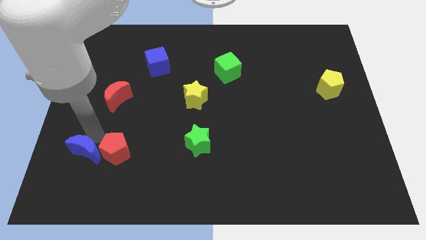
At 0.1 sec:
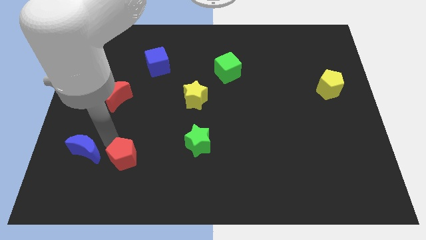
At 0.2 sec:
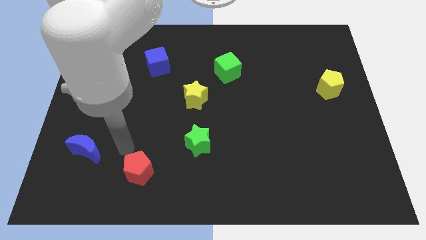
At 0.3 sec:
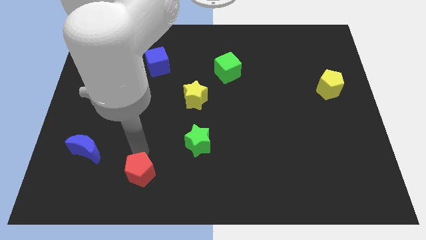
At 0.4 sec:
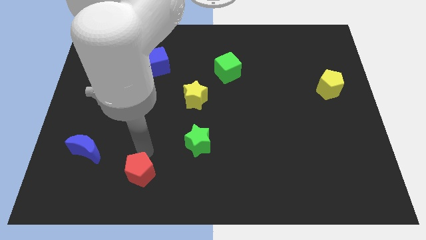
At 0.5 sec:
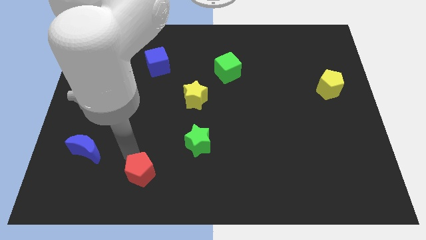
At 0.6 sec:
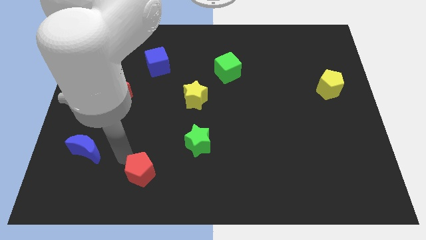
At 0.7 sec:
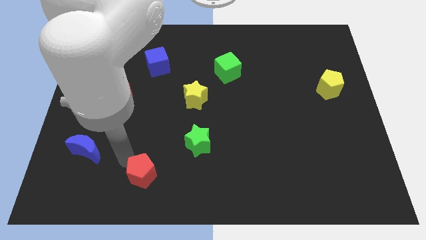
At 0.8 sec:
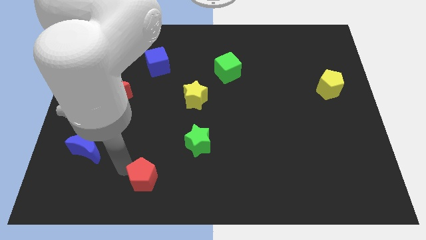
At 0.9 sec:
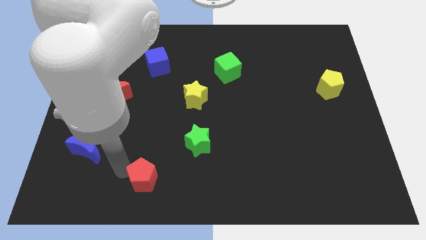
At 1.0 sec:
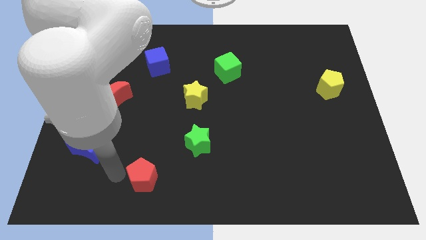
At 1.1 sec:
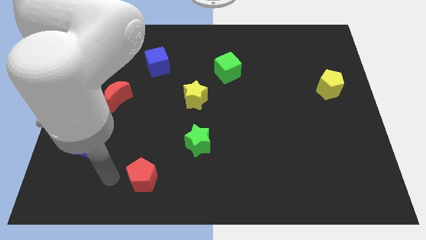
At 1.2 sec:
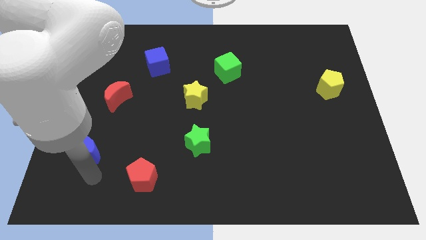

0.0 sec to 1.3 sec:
push the red pentagon diagonally left of the green star

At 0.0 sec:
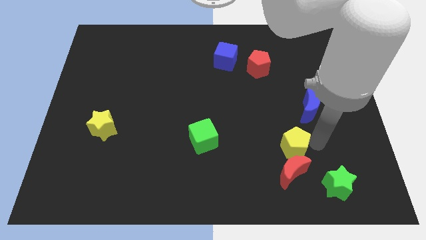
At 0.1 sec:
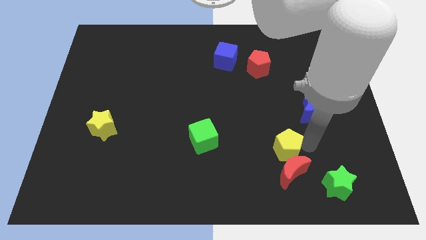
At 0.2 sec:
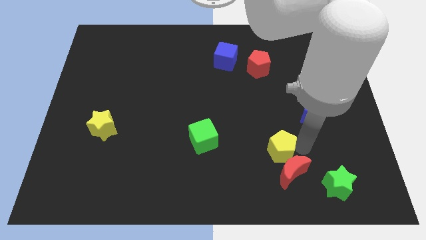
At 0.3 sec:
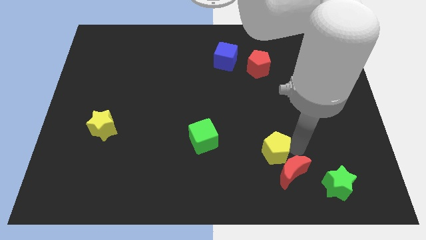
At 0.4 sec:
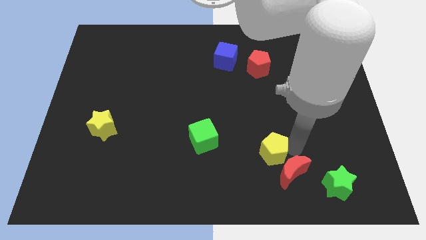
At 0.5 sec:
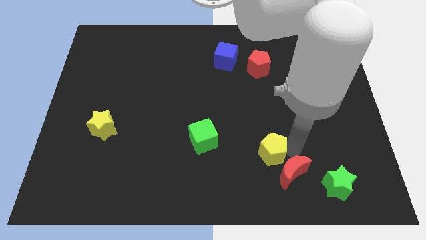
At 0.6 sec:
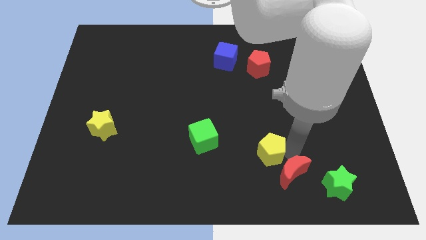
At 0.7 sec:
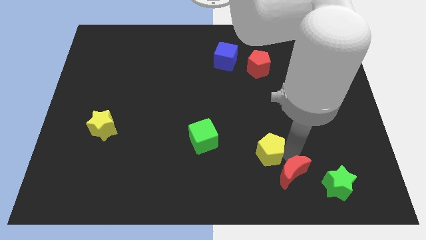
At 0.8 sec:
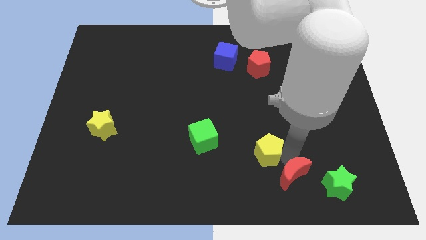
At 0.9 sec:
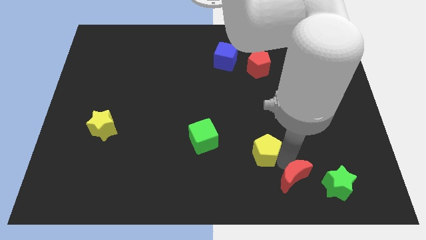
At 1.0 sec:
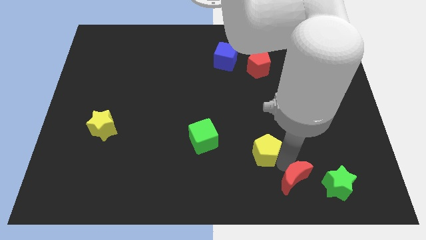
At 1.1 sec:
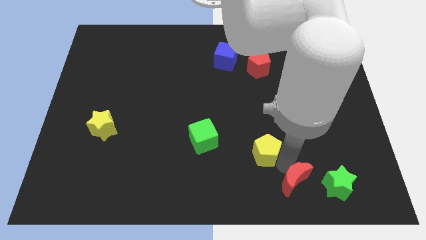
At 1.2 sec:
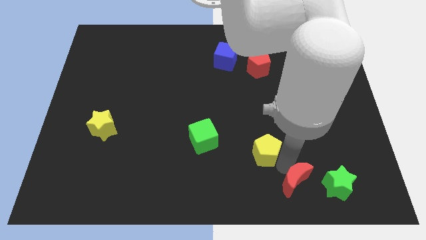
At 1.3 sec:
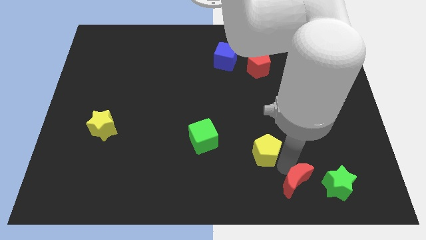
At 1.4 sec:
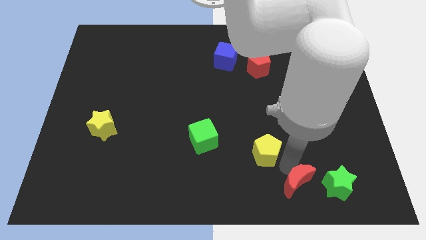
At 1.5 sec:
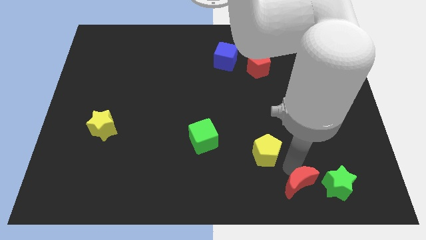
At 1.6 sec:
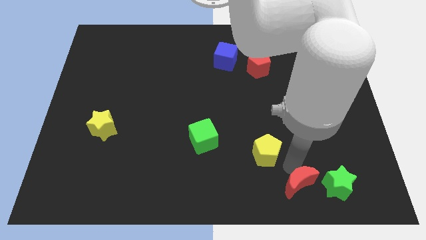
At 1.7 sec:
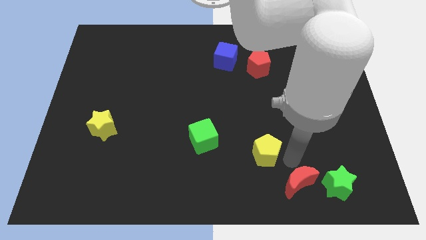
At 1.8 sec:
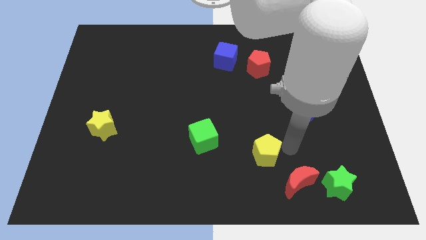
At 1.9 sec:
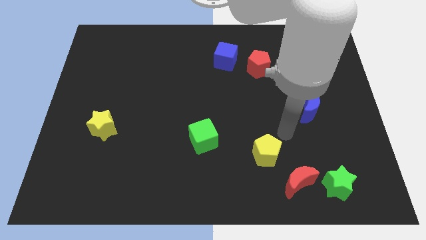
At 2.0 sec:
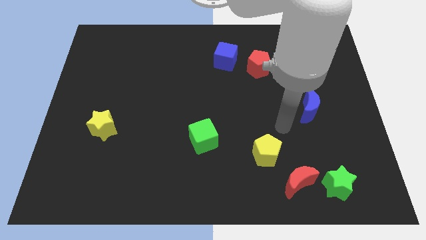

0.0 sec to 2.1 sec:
separate red moon and yellow pentagon

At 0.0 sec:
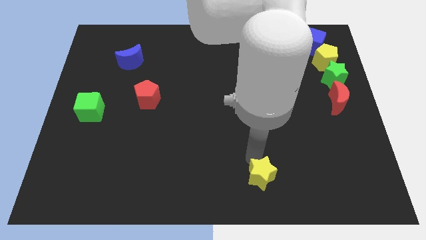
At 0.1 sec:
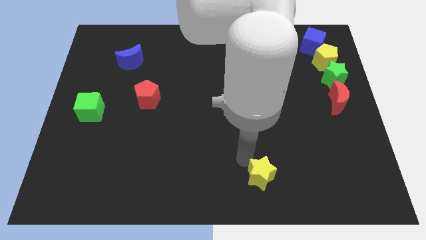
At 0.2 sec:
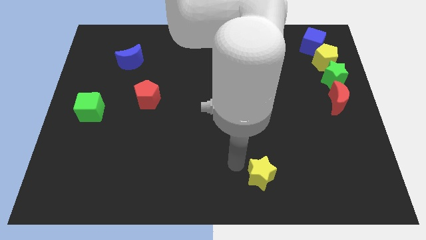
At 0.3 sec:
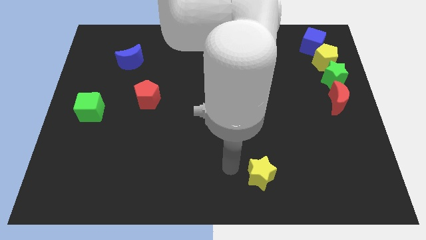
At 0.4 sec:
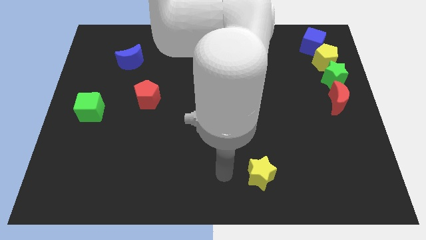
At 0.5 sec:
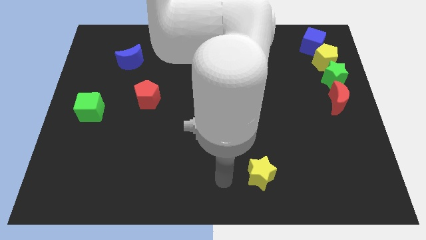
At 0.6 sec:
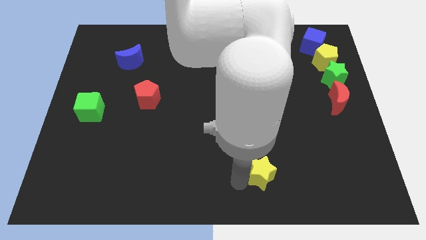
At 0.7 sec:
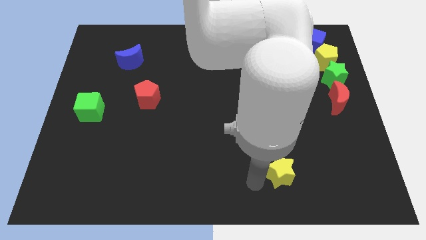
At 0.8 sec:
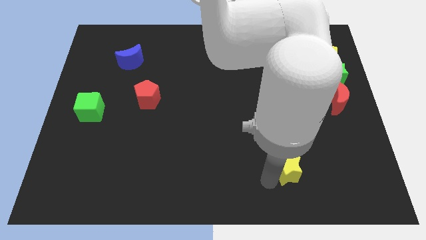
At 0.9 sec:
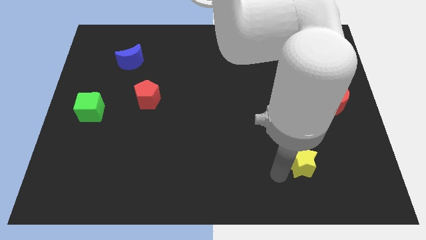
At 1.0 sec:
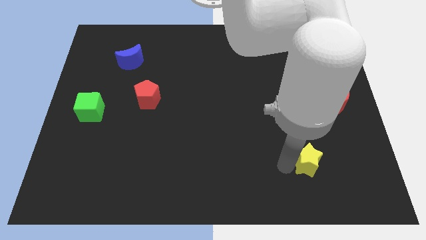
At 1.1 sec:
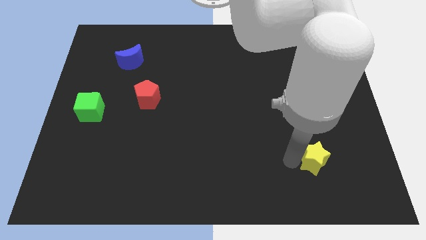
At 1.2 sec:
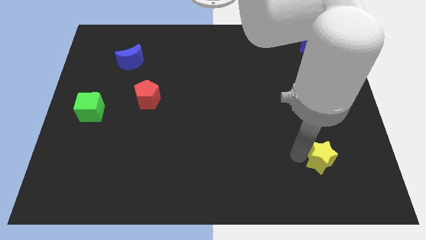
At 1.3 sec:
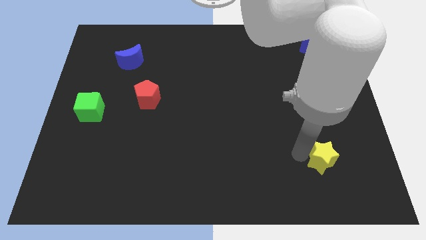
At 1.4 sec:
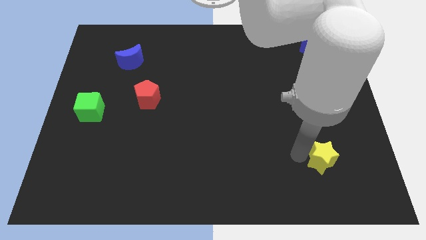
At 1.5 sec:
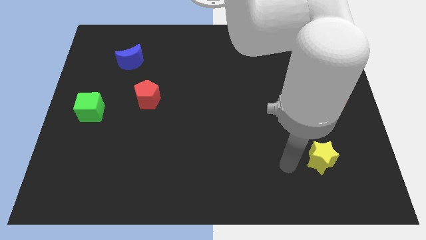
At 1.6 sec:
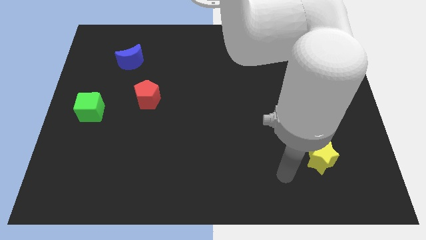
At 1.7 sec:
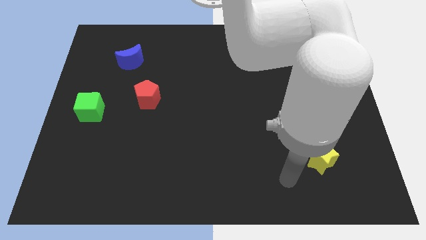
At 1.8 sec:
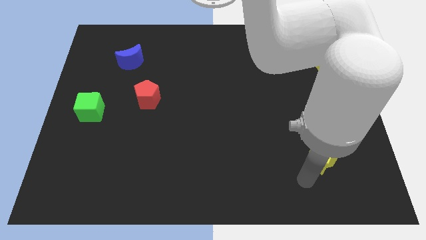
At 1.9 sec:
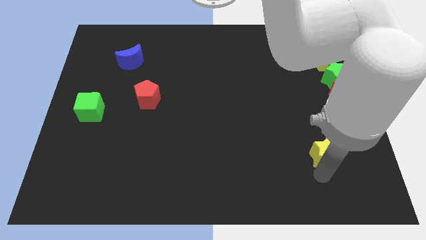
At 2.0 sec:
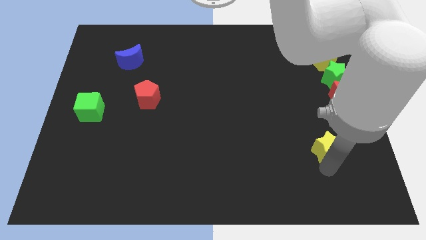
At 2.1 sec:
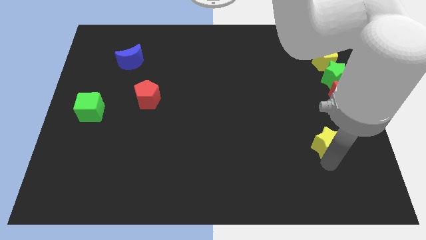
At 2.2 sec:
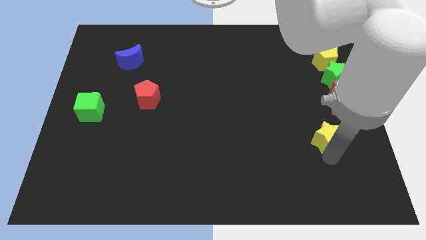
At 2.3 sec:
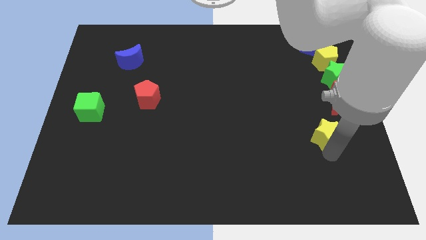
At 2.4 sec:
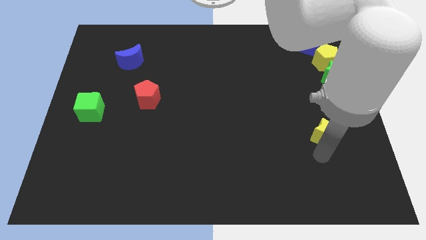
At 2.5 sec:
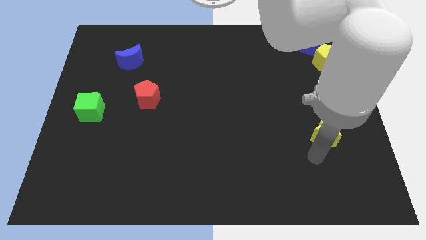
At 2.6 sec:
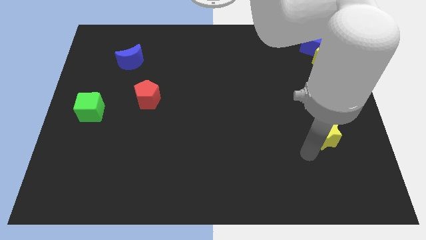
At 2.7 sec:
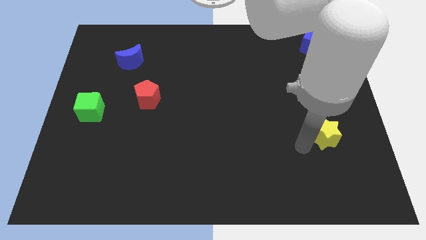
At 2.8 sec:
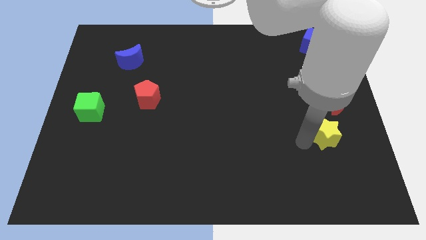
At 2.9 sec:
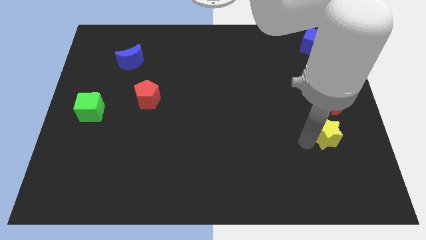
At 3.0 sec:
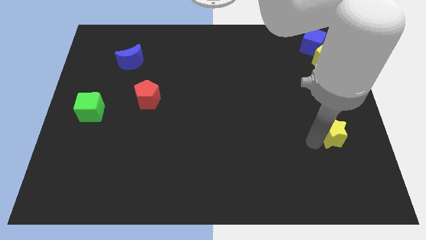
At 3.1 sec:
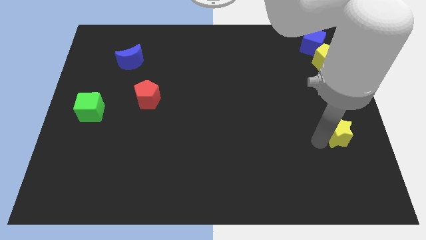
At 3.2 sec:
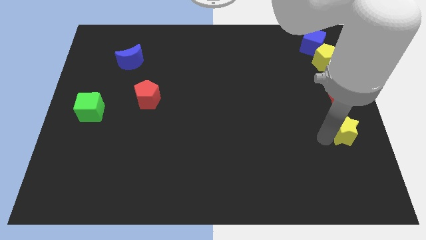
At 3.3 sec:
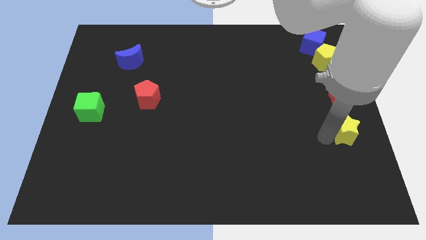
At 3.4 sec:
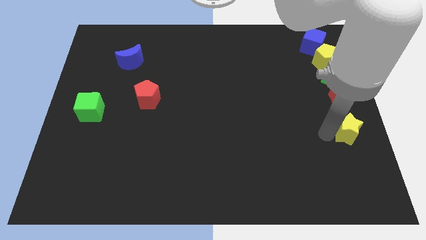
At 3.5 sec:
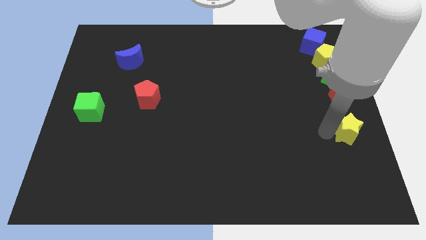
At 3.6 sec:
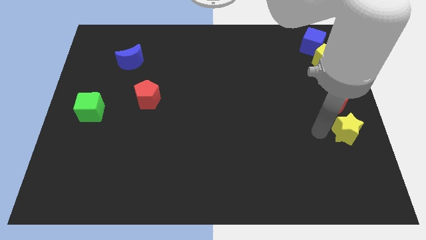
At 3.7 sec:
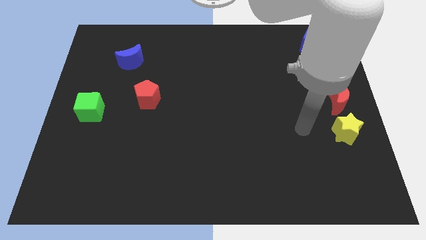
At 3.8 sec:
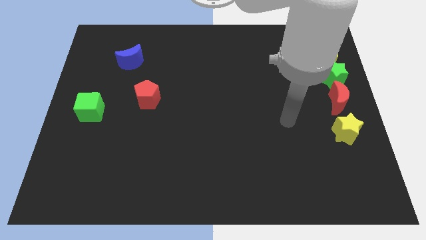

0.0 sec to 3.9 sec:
place yellow star below red moon

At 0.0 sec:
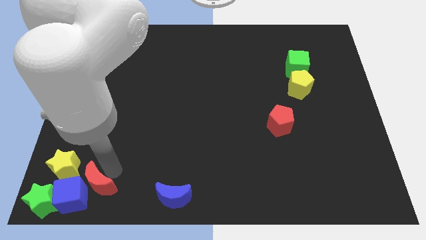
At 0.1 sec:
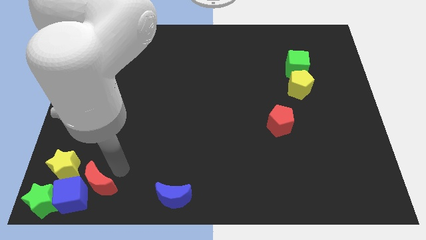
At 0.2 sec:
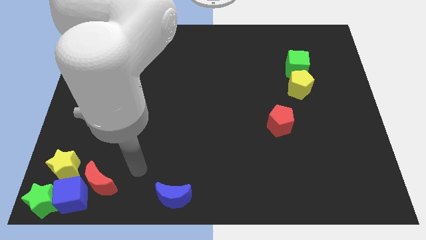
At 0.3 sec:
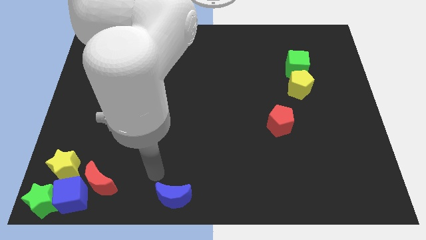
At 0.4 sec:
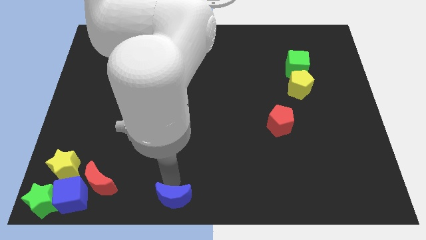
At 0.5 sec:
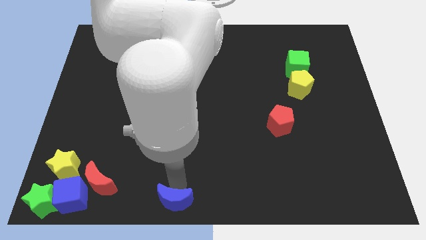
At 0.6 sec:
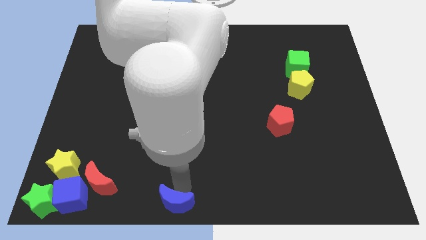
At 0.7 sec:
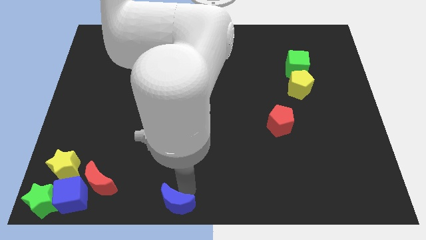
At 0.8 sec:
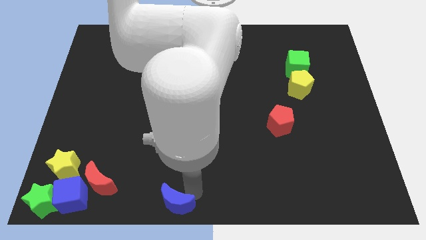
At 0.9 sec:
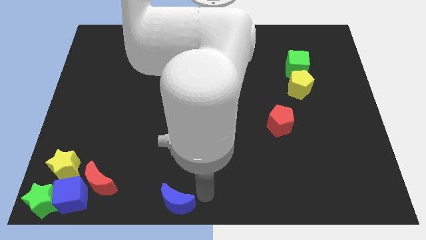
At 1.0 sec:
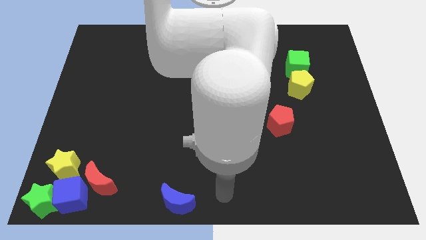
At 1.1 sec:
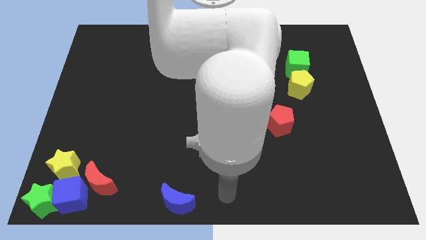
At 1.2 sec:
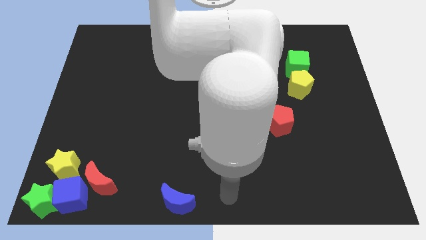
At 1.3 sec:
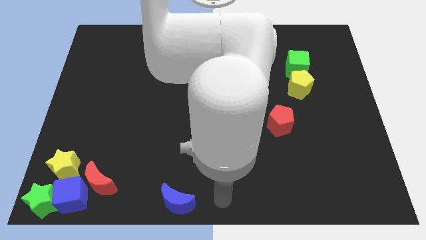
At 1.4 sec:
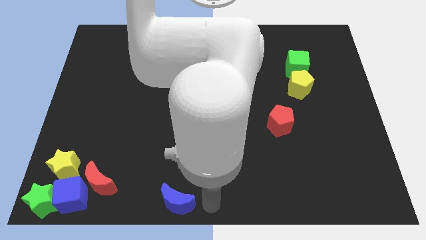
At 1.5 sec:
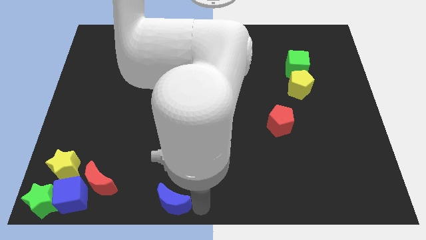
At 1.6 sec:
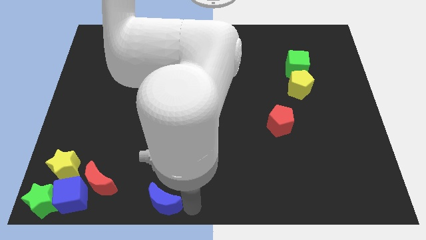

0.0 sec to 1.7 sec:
point your arm right to blue moon
